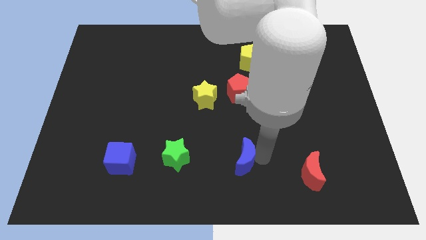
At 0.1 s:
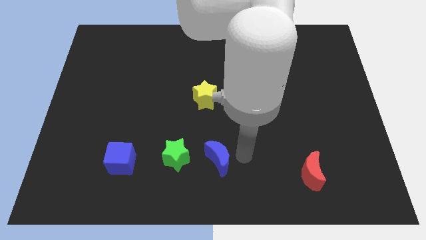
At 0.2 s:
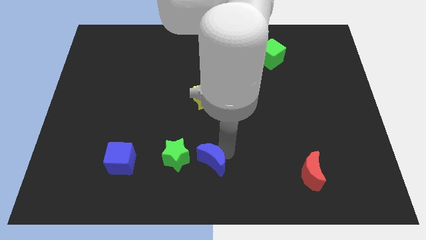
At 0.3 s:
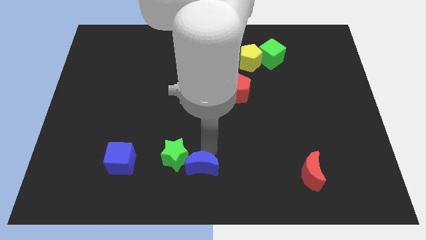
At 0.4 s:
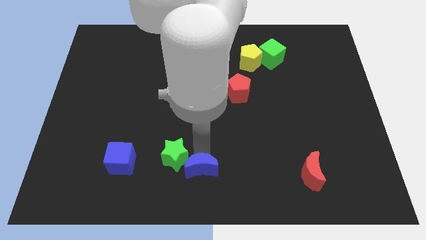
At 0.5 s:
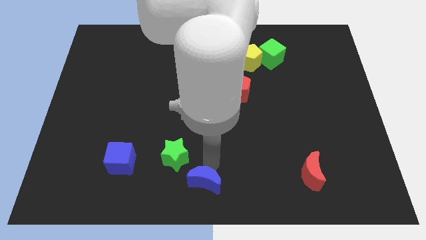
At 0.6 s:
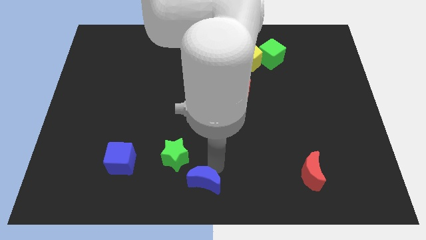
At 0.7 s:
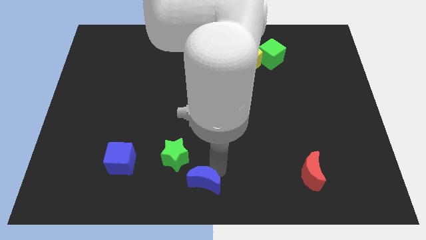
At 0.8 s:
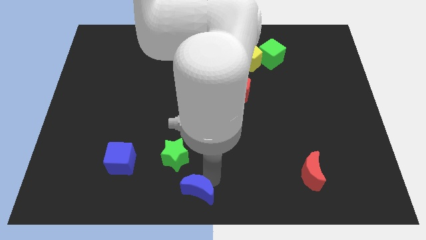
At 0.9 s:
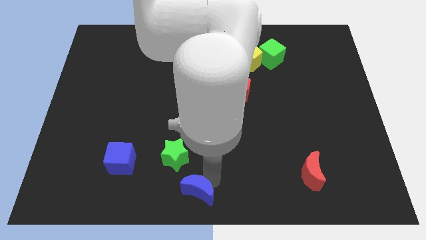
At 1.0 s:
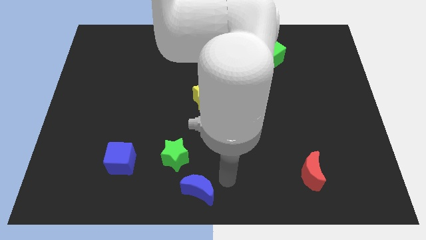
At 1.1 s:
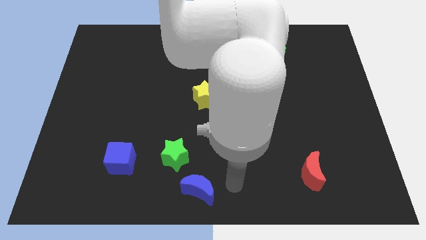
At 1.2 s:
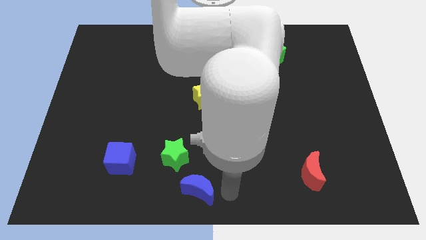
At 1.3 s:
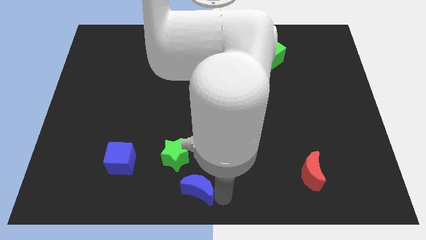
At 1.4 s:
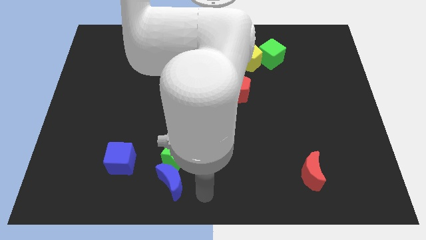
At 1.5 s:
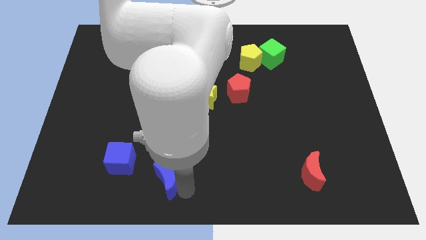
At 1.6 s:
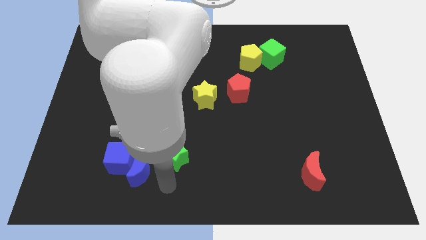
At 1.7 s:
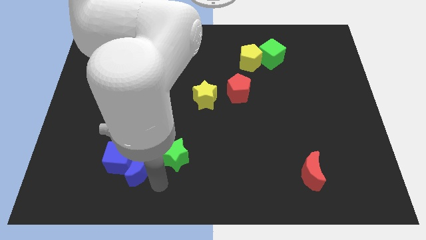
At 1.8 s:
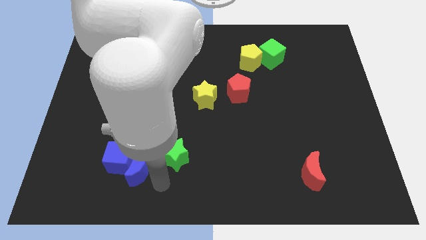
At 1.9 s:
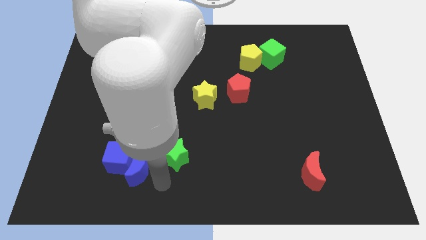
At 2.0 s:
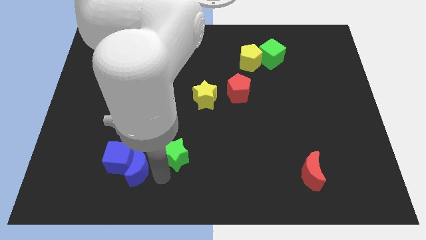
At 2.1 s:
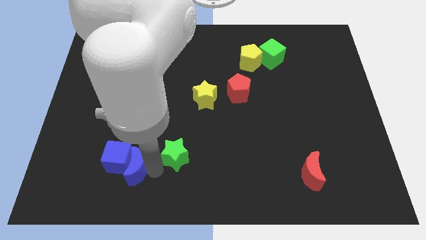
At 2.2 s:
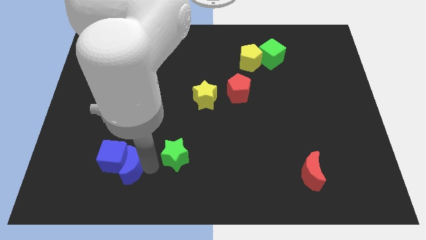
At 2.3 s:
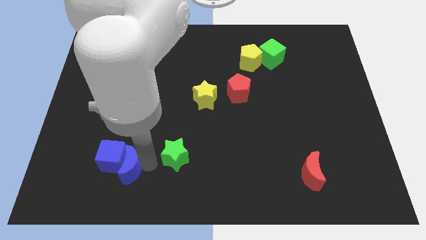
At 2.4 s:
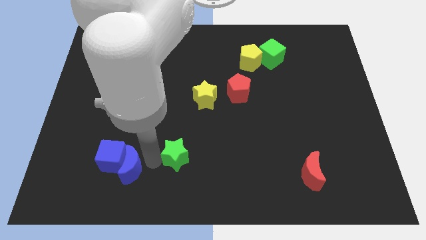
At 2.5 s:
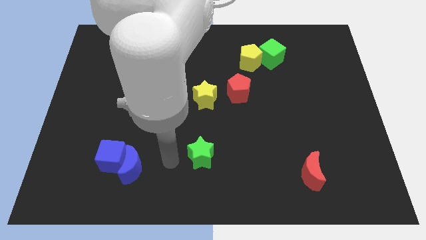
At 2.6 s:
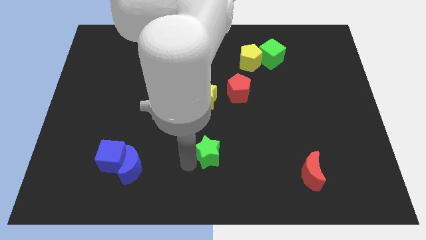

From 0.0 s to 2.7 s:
push green star below yellow star

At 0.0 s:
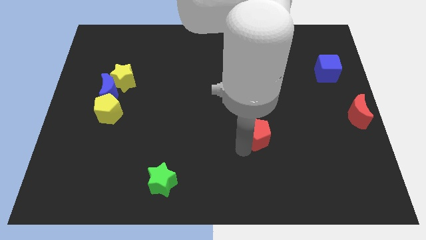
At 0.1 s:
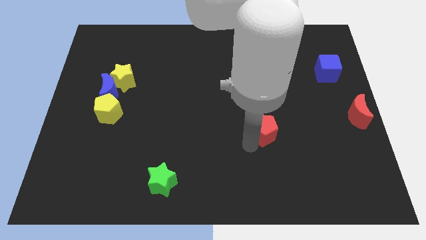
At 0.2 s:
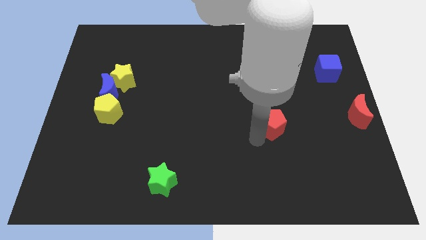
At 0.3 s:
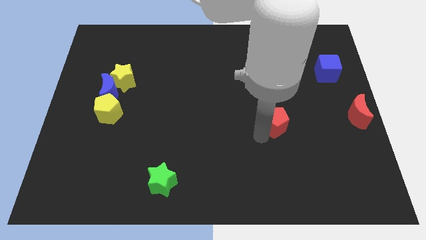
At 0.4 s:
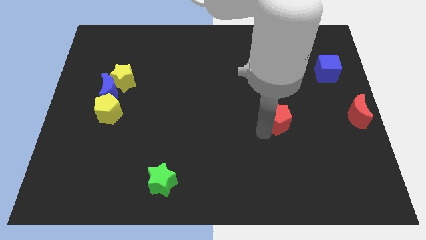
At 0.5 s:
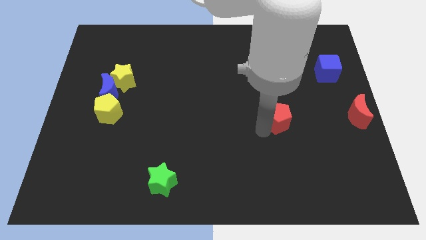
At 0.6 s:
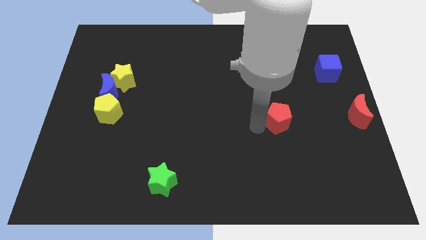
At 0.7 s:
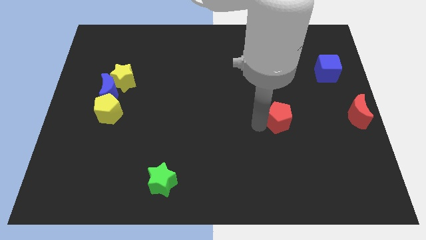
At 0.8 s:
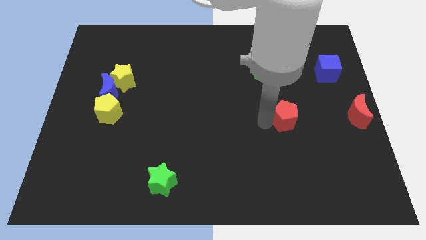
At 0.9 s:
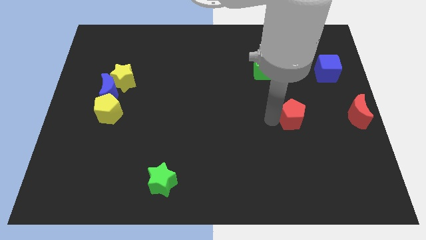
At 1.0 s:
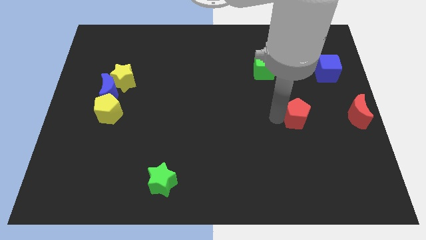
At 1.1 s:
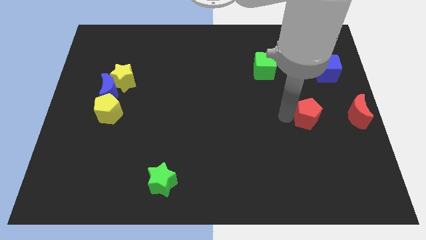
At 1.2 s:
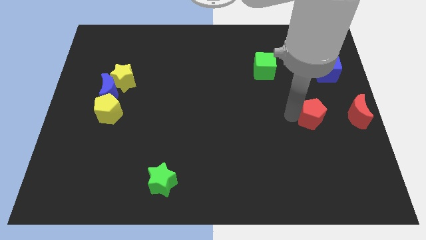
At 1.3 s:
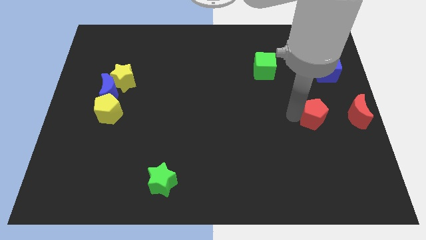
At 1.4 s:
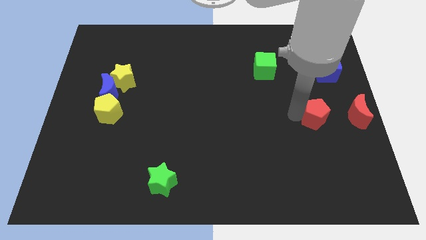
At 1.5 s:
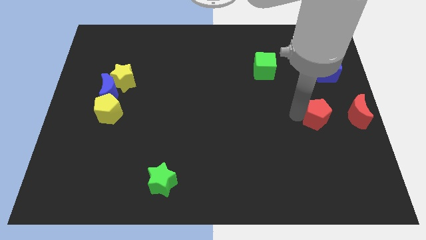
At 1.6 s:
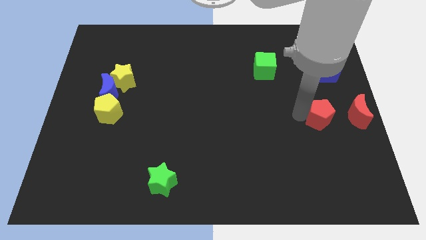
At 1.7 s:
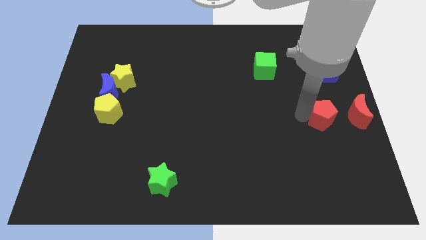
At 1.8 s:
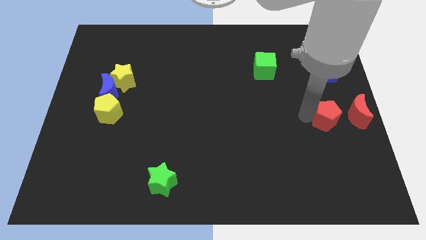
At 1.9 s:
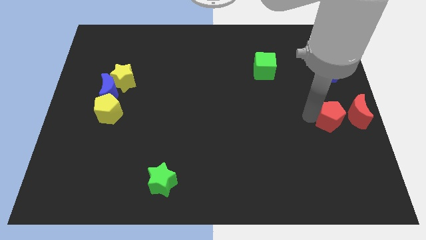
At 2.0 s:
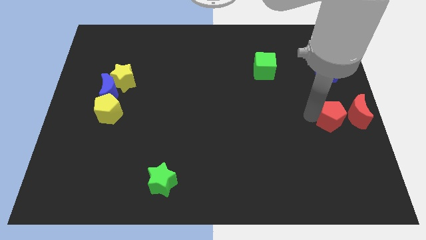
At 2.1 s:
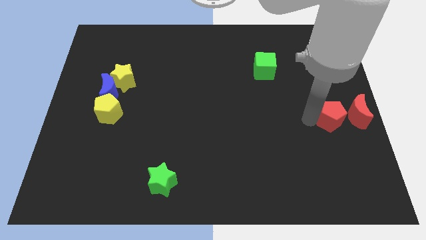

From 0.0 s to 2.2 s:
move the red pentagon towards the red crescent

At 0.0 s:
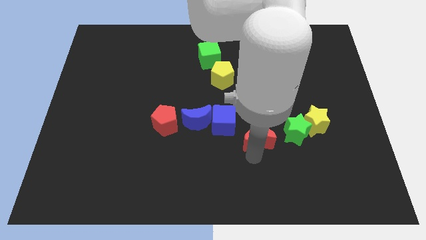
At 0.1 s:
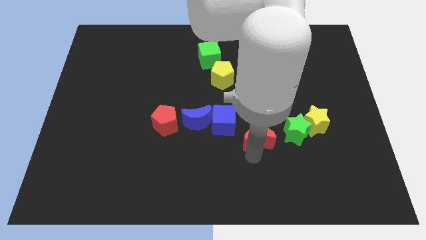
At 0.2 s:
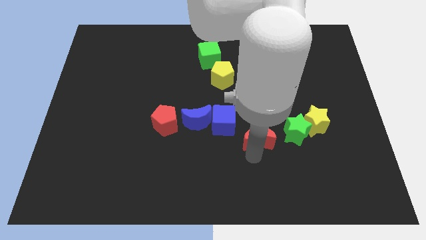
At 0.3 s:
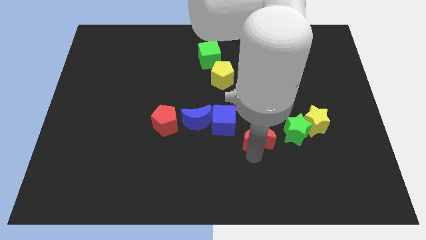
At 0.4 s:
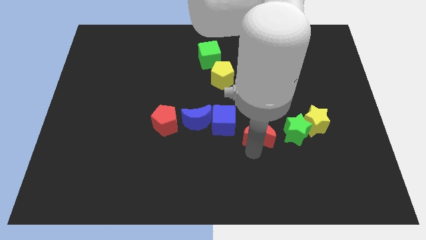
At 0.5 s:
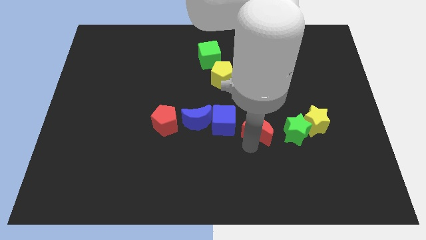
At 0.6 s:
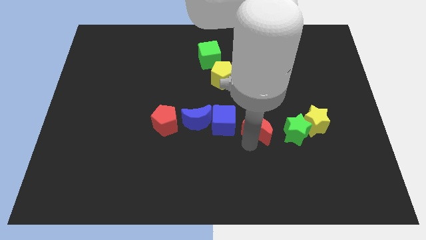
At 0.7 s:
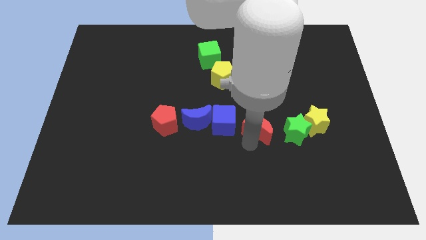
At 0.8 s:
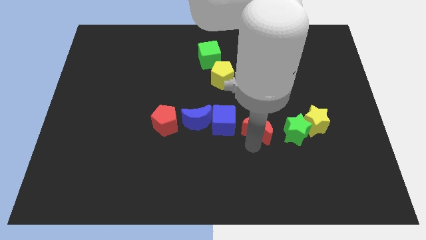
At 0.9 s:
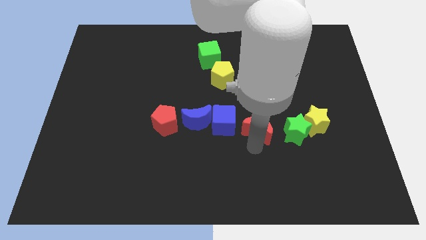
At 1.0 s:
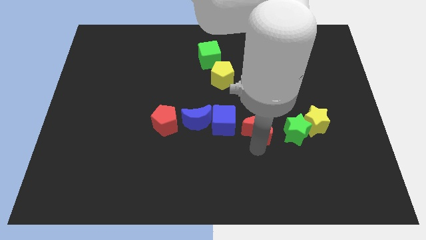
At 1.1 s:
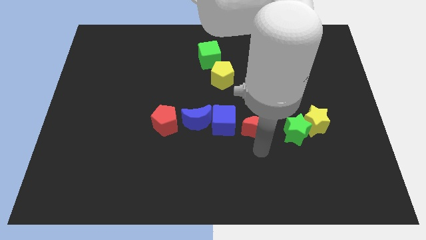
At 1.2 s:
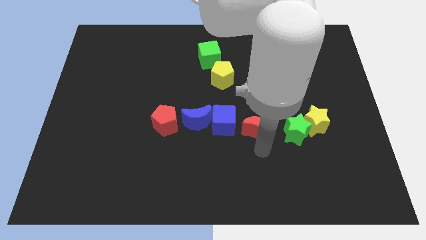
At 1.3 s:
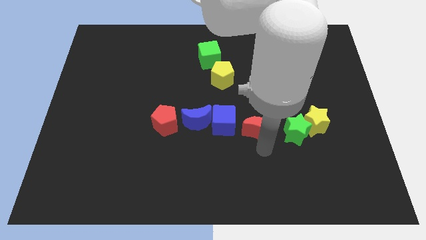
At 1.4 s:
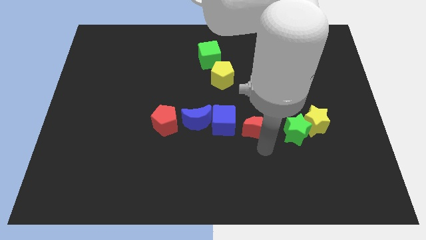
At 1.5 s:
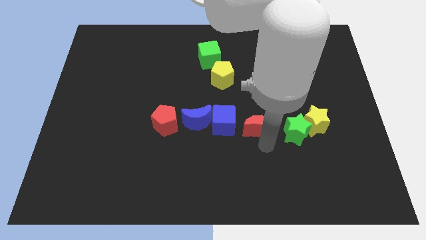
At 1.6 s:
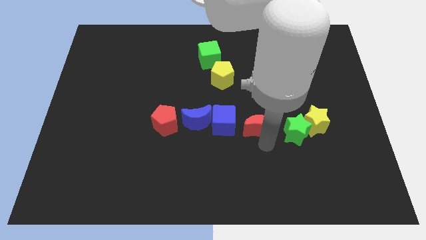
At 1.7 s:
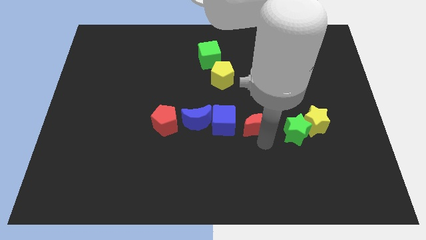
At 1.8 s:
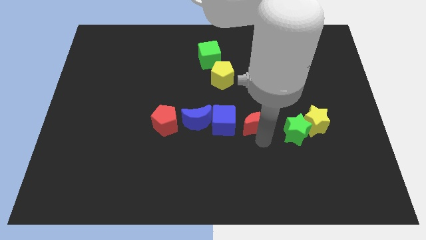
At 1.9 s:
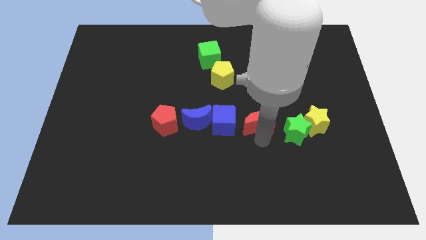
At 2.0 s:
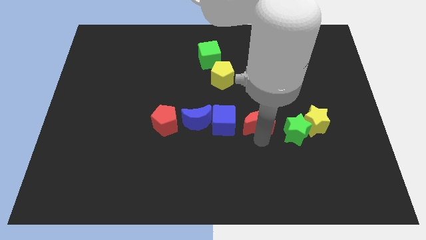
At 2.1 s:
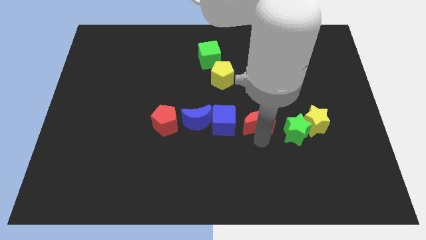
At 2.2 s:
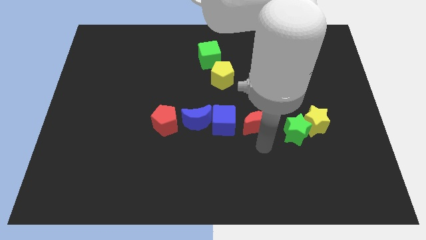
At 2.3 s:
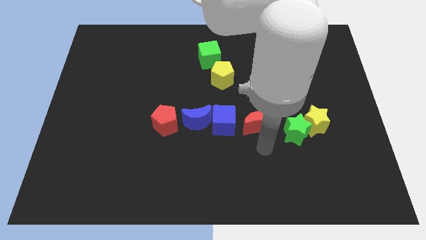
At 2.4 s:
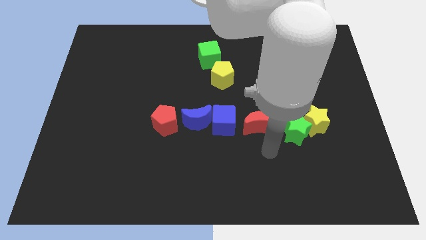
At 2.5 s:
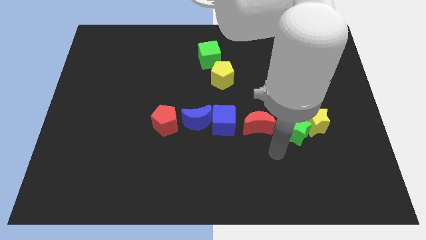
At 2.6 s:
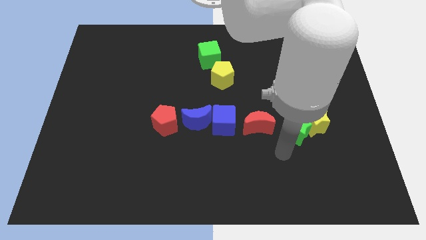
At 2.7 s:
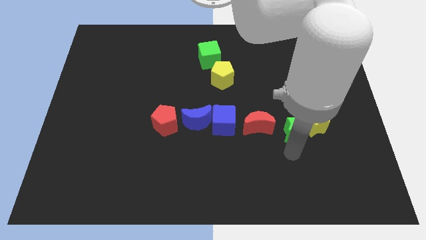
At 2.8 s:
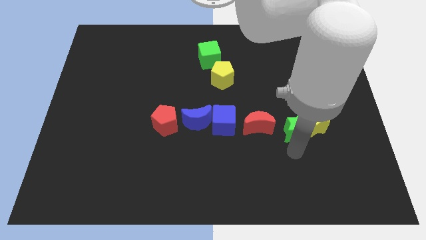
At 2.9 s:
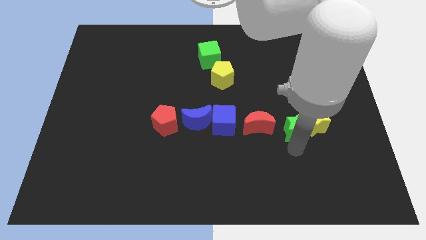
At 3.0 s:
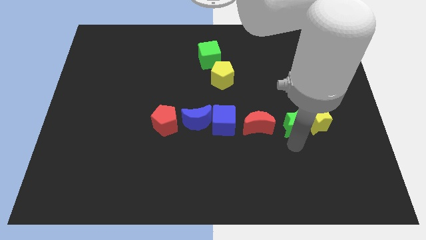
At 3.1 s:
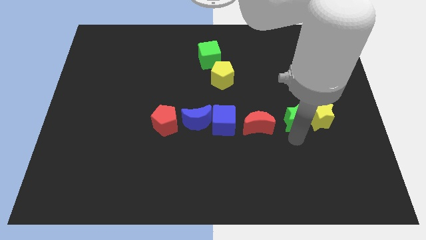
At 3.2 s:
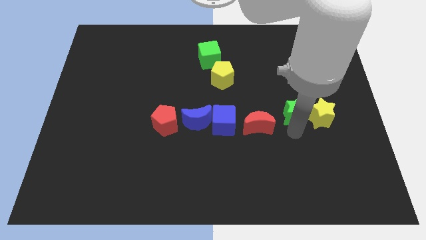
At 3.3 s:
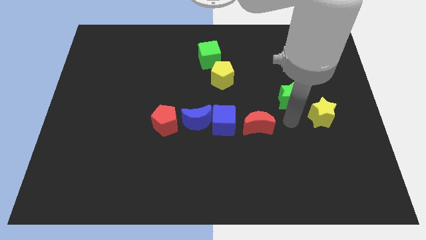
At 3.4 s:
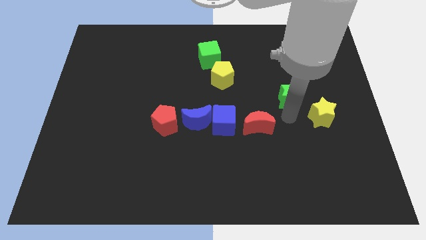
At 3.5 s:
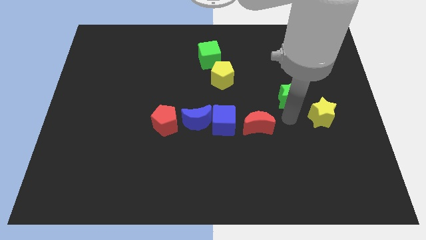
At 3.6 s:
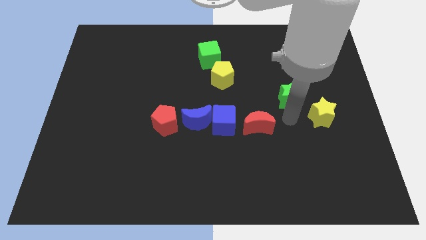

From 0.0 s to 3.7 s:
move green star upwards

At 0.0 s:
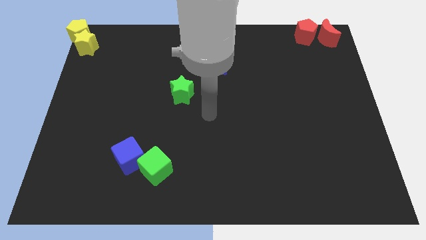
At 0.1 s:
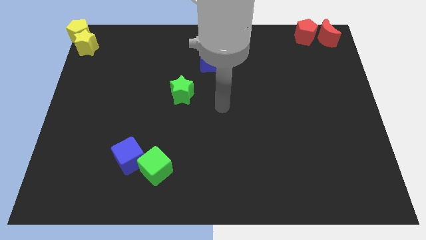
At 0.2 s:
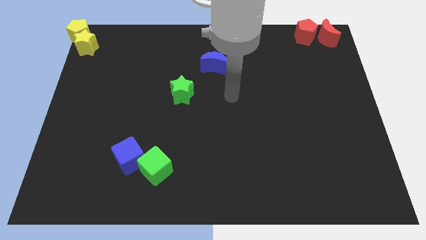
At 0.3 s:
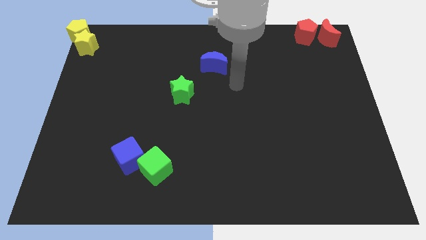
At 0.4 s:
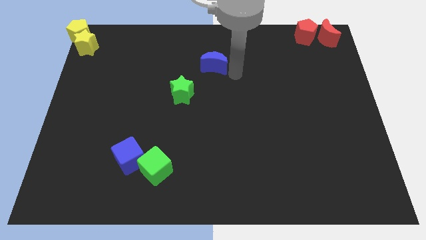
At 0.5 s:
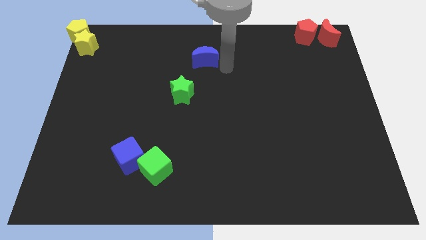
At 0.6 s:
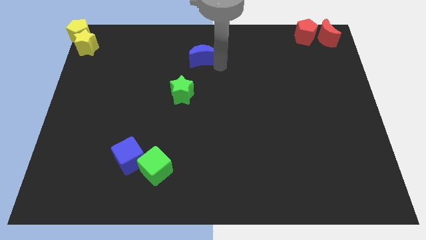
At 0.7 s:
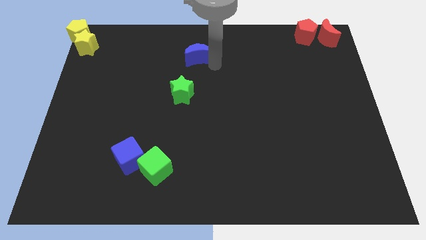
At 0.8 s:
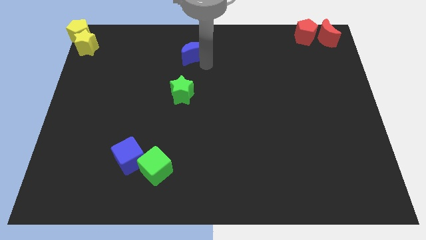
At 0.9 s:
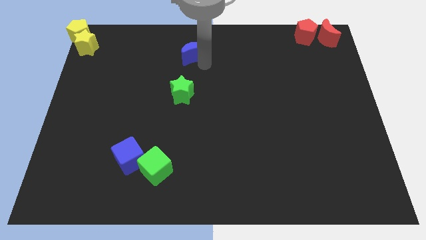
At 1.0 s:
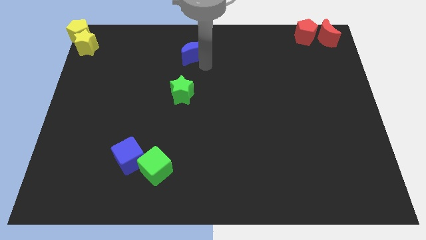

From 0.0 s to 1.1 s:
slightly adjust the place of blue crescent
